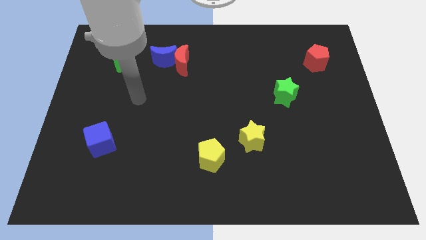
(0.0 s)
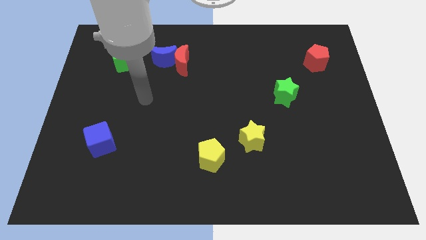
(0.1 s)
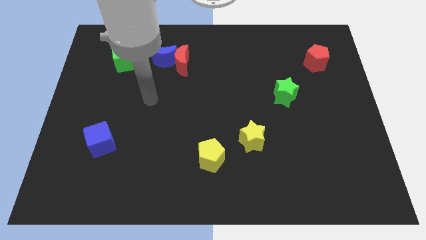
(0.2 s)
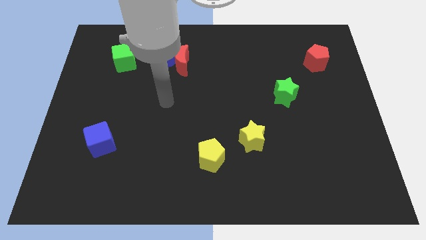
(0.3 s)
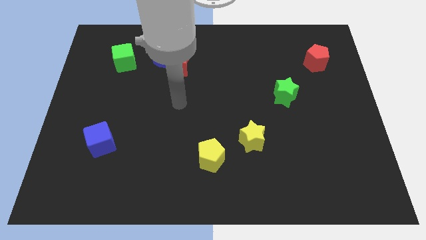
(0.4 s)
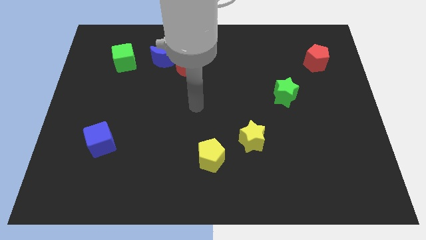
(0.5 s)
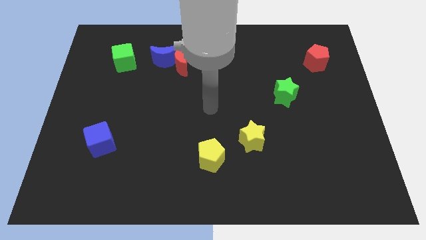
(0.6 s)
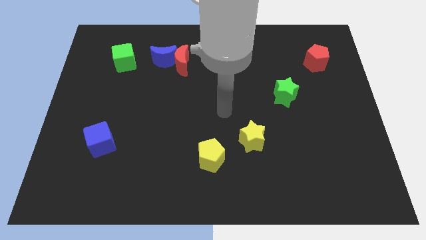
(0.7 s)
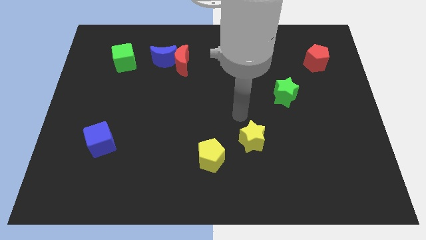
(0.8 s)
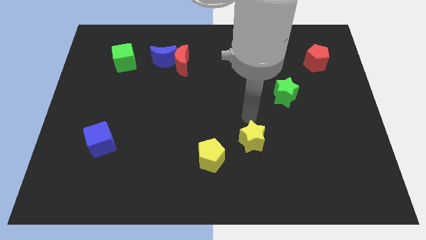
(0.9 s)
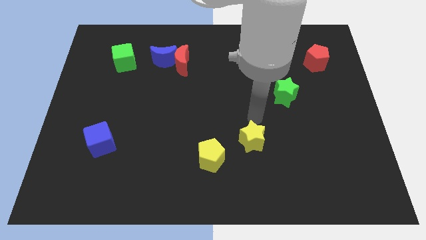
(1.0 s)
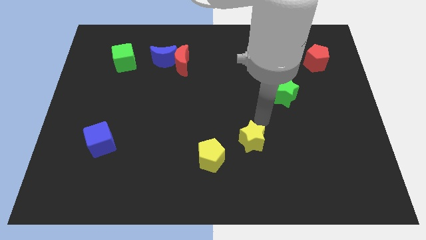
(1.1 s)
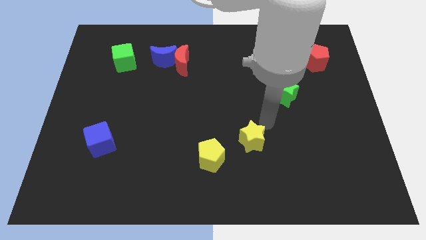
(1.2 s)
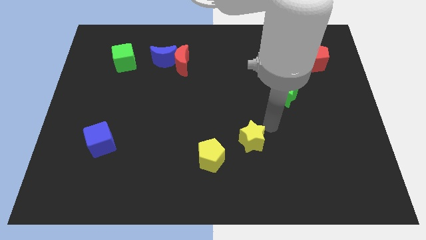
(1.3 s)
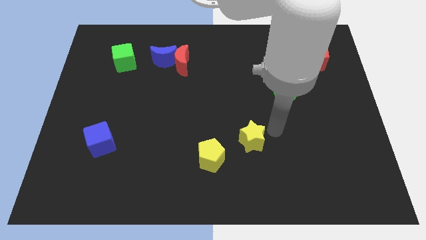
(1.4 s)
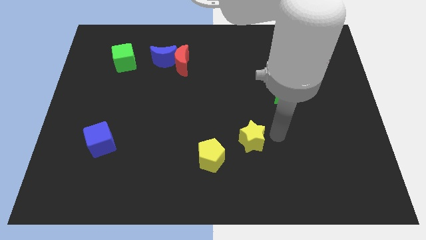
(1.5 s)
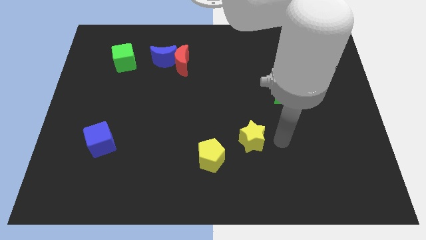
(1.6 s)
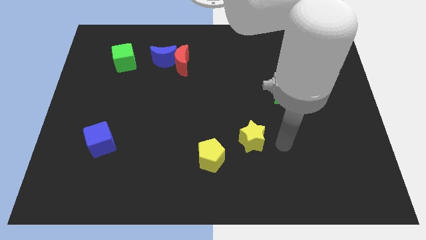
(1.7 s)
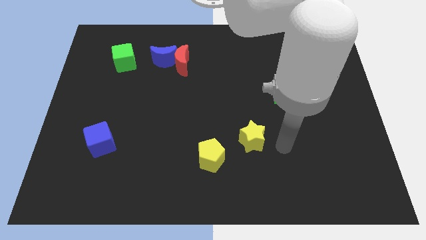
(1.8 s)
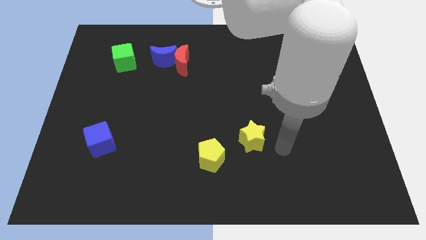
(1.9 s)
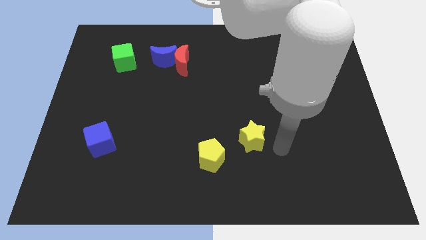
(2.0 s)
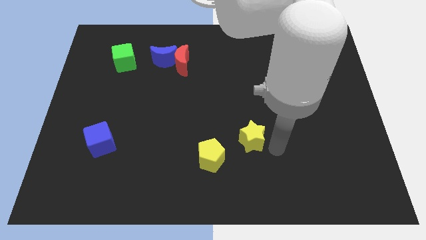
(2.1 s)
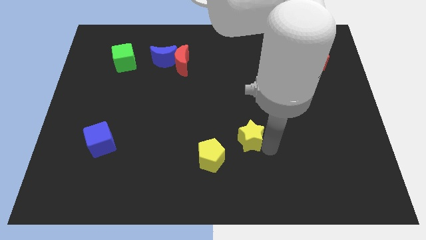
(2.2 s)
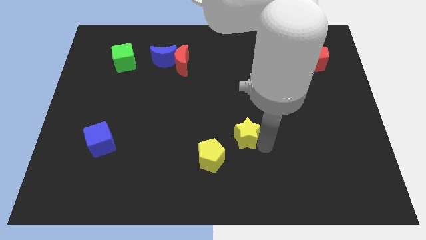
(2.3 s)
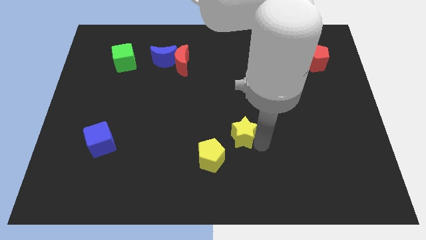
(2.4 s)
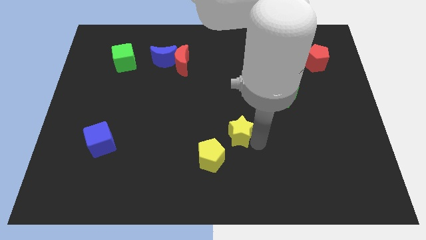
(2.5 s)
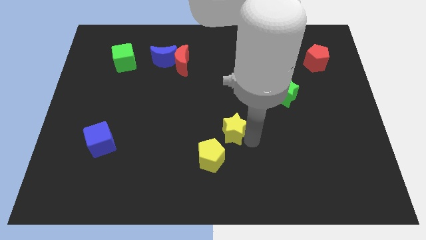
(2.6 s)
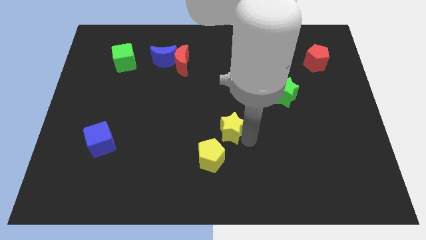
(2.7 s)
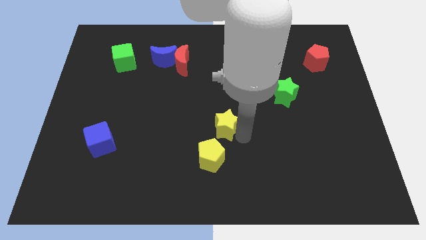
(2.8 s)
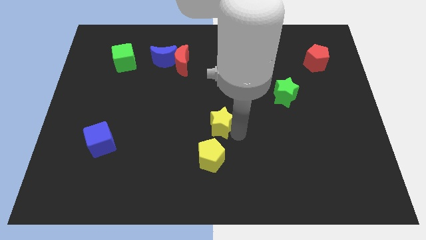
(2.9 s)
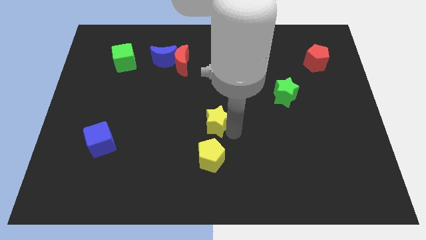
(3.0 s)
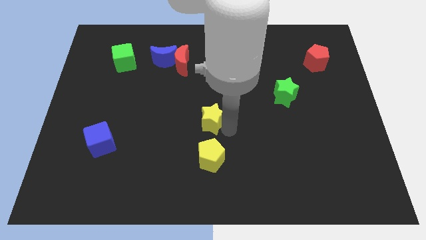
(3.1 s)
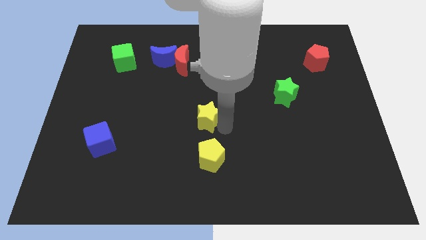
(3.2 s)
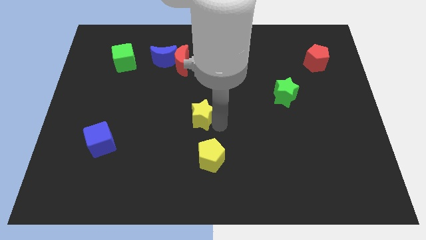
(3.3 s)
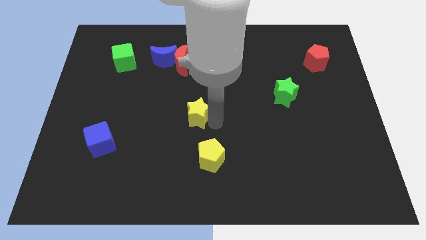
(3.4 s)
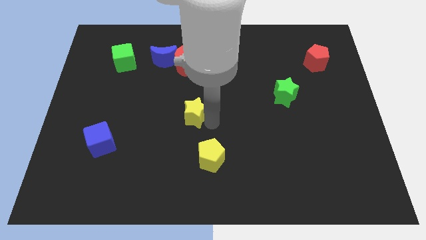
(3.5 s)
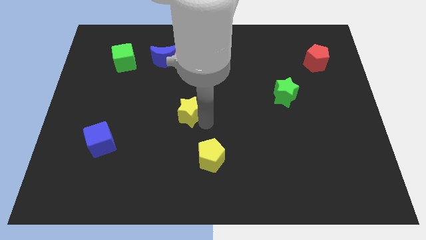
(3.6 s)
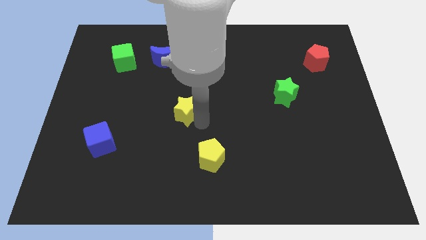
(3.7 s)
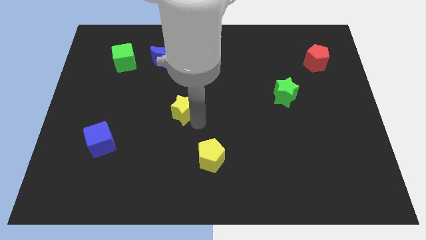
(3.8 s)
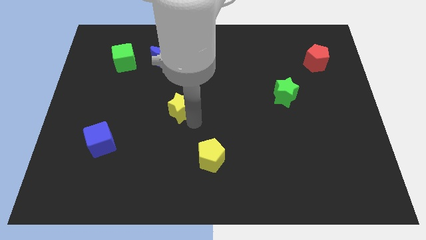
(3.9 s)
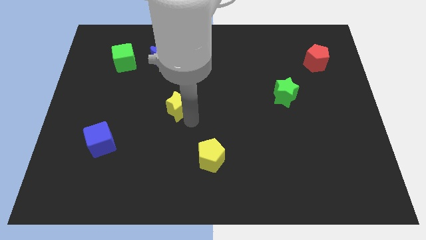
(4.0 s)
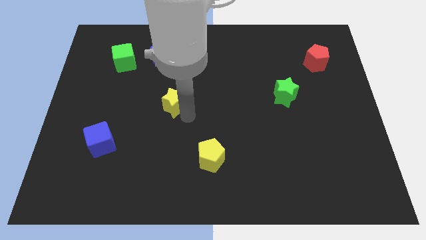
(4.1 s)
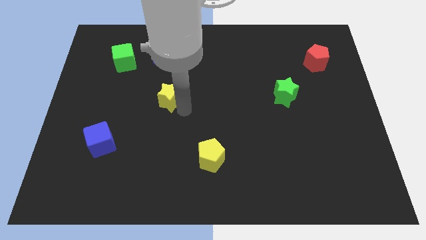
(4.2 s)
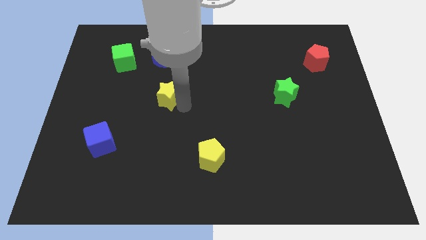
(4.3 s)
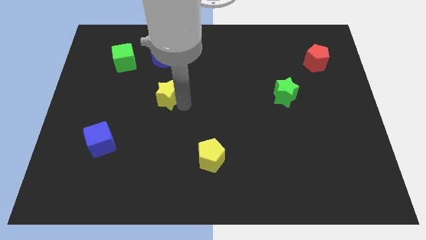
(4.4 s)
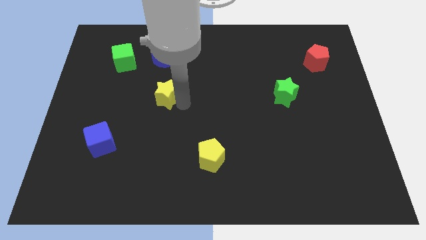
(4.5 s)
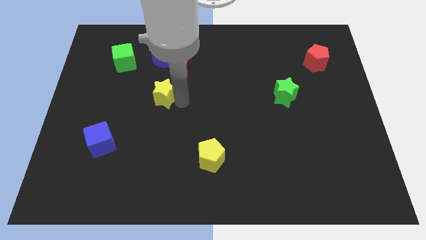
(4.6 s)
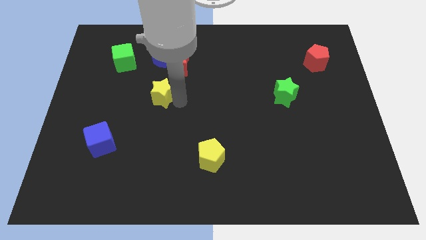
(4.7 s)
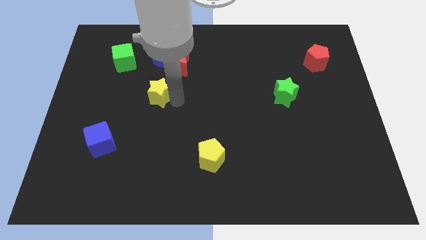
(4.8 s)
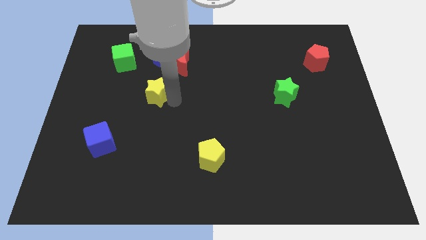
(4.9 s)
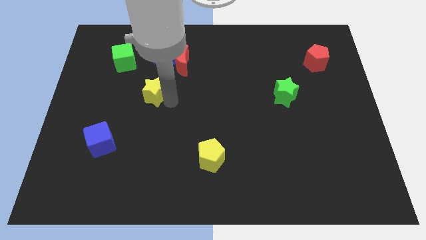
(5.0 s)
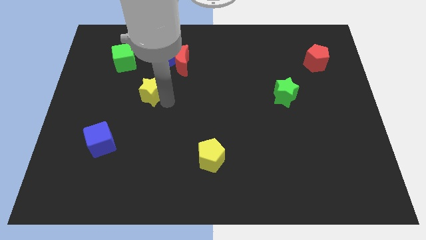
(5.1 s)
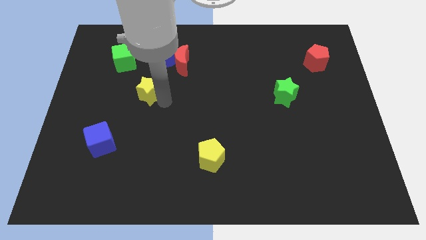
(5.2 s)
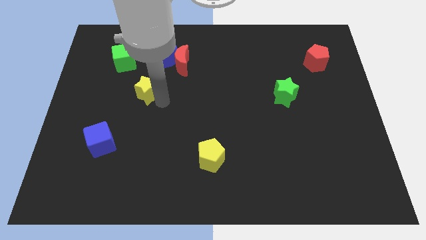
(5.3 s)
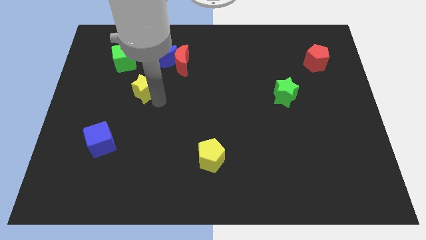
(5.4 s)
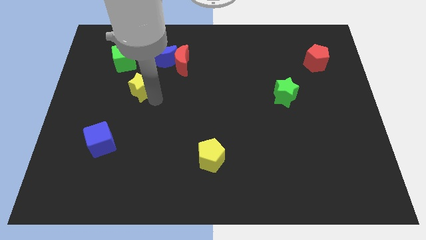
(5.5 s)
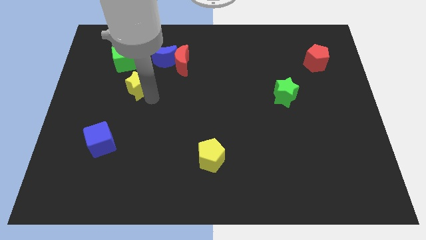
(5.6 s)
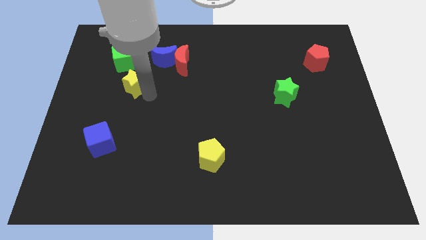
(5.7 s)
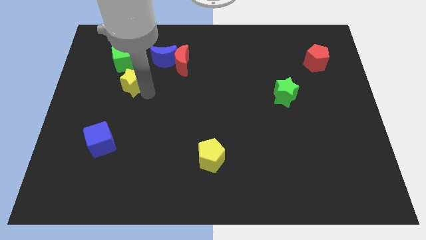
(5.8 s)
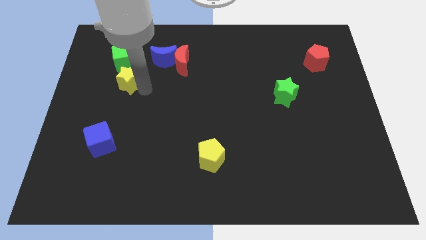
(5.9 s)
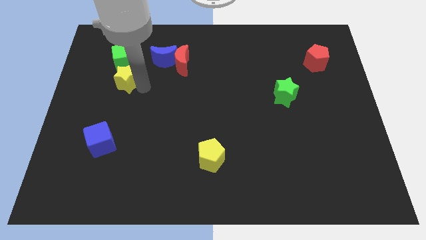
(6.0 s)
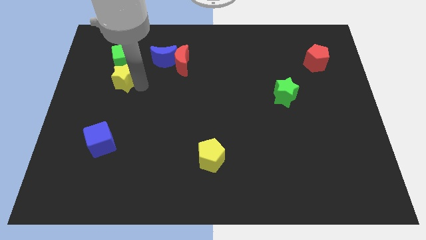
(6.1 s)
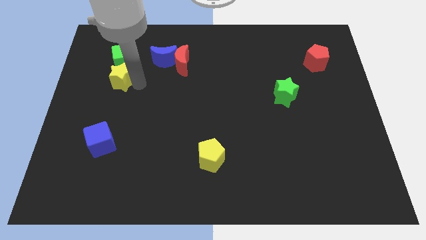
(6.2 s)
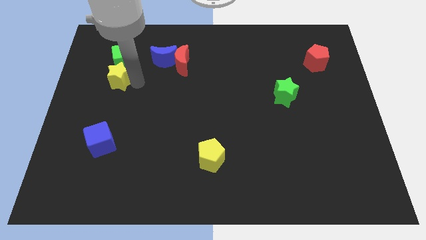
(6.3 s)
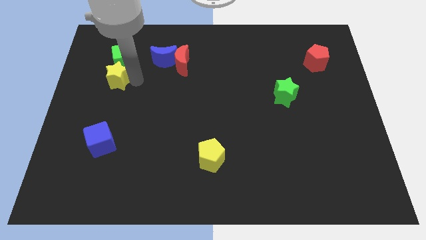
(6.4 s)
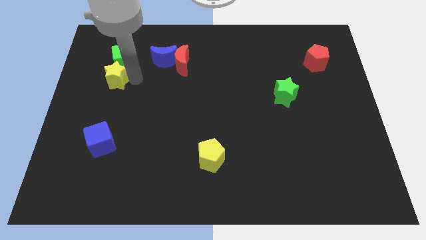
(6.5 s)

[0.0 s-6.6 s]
push the yellow star to the green cube

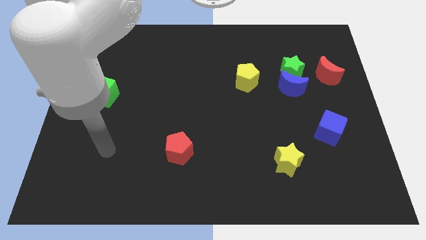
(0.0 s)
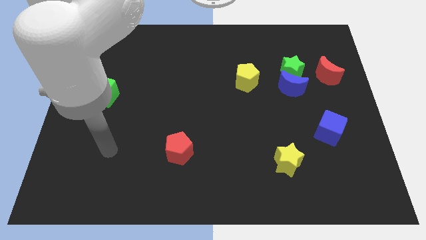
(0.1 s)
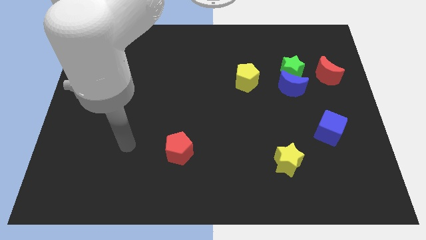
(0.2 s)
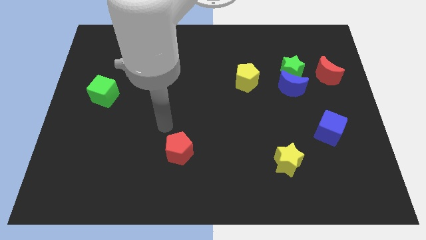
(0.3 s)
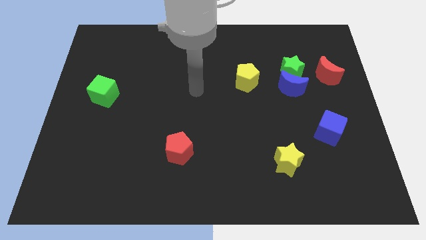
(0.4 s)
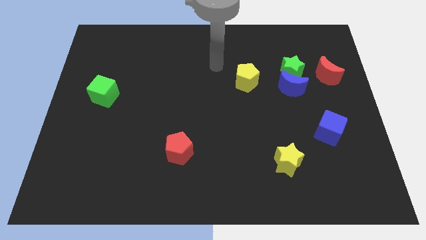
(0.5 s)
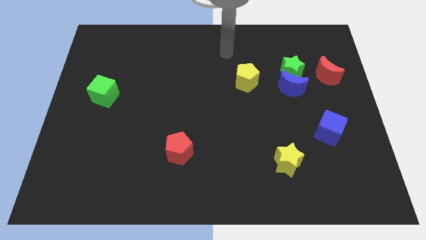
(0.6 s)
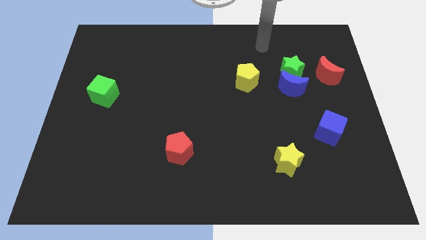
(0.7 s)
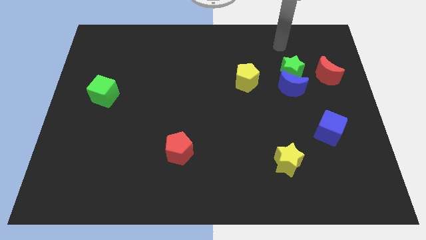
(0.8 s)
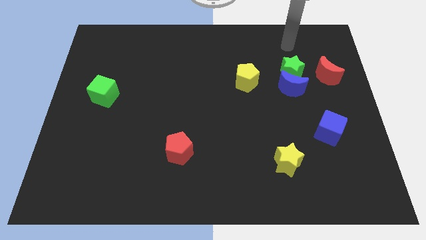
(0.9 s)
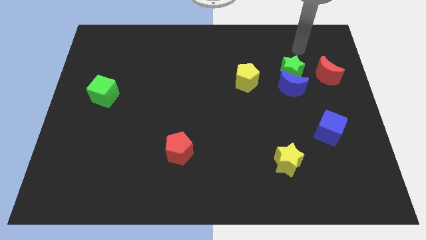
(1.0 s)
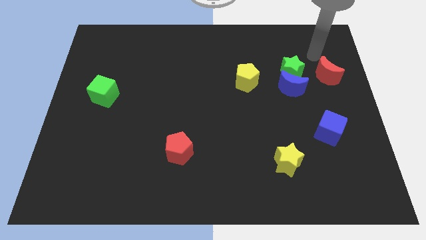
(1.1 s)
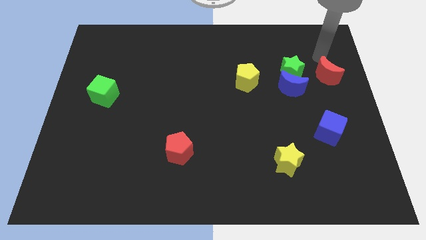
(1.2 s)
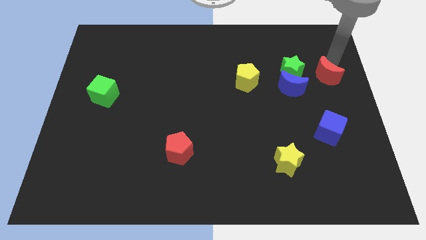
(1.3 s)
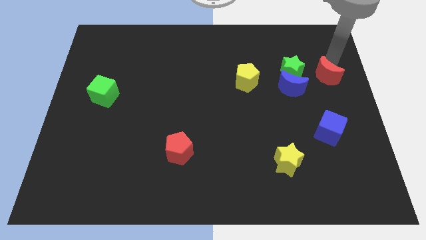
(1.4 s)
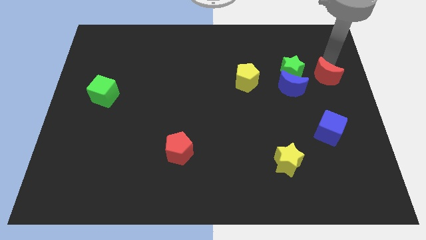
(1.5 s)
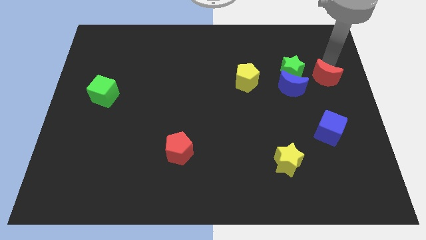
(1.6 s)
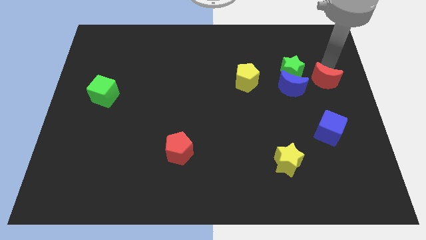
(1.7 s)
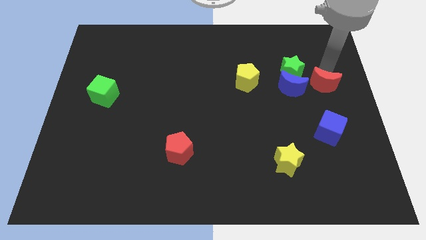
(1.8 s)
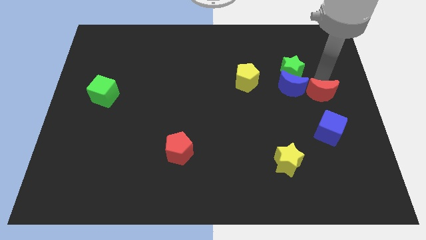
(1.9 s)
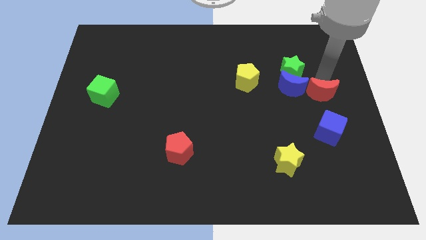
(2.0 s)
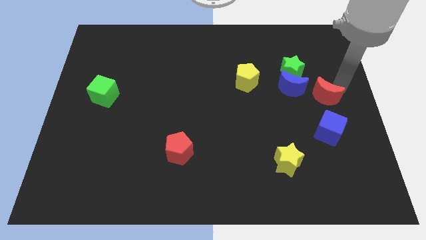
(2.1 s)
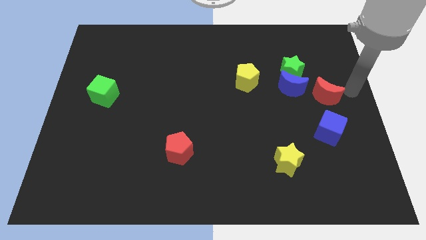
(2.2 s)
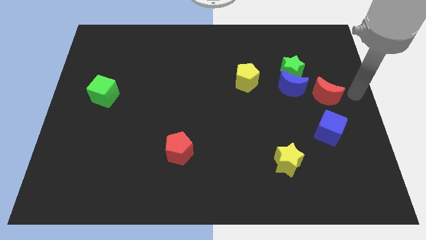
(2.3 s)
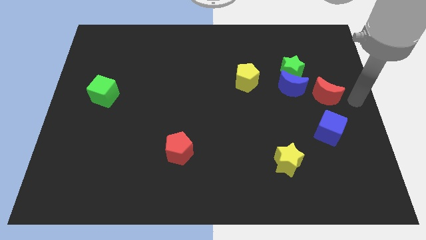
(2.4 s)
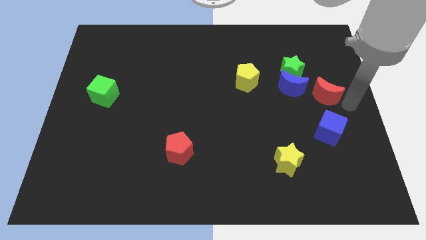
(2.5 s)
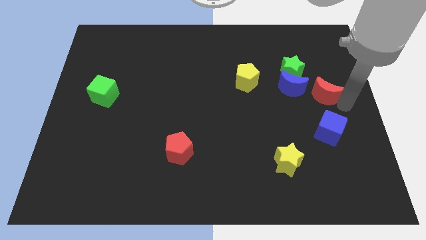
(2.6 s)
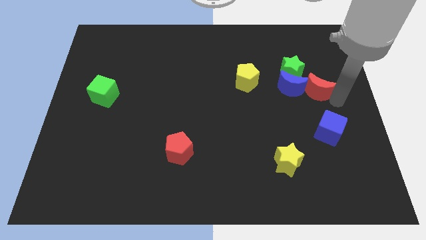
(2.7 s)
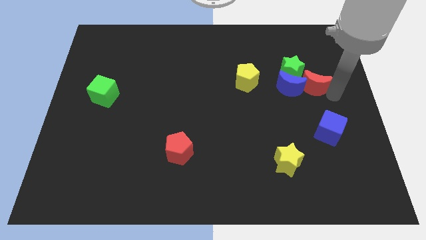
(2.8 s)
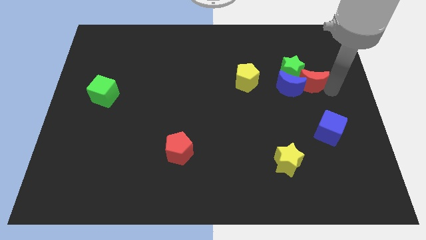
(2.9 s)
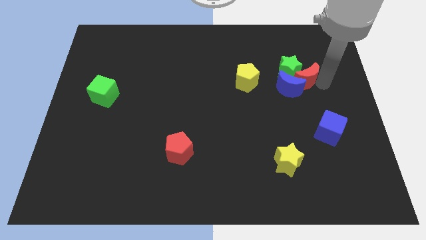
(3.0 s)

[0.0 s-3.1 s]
slide the red moon close to the blue moon
